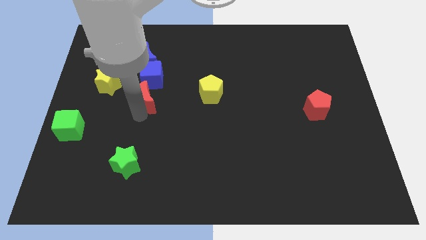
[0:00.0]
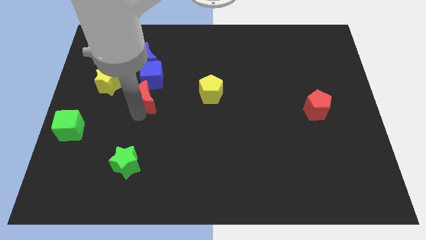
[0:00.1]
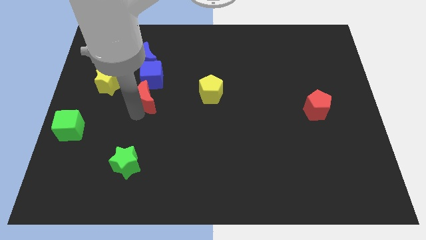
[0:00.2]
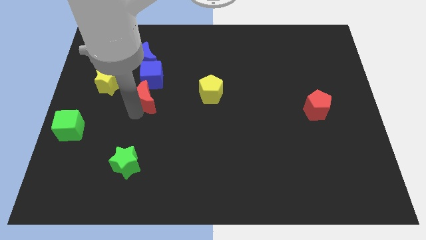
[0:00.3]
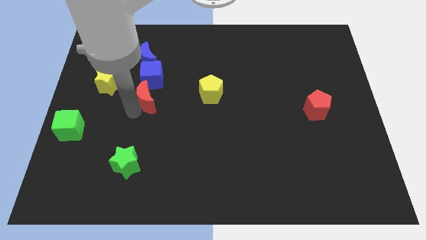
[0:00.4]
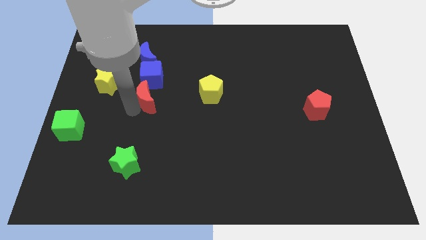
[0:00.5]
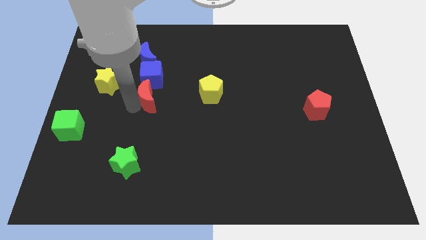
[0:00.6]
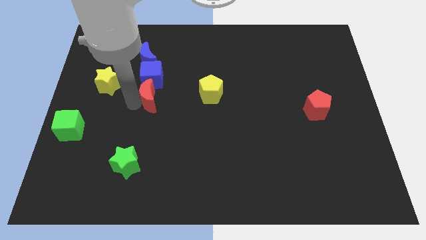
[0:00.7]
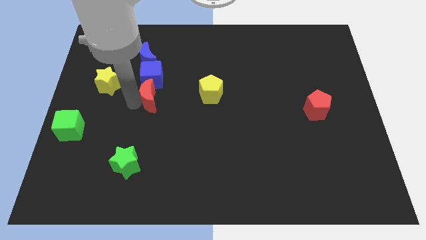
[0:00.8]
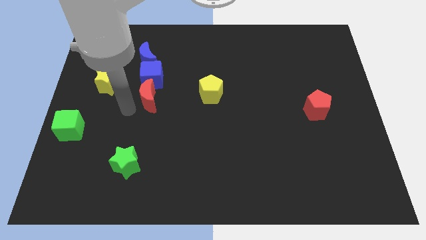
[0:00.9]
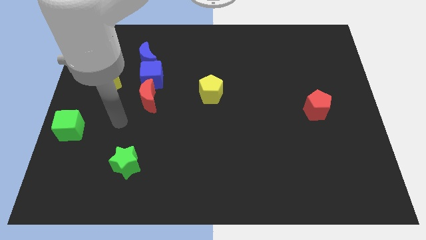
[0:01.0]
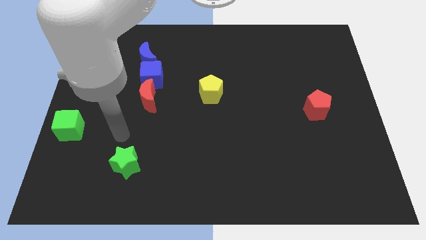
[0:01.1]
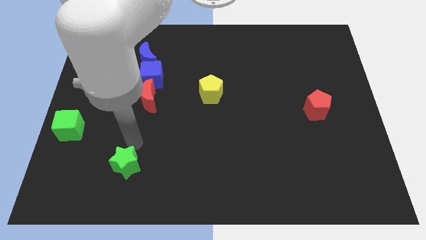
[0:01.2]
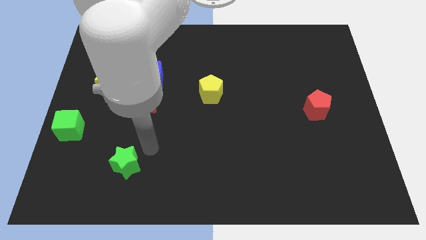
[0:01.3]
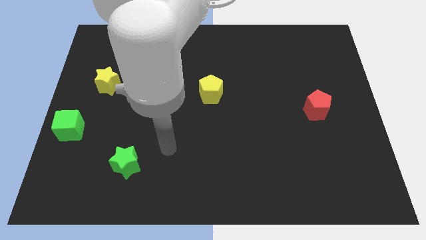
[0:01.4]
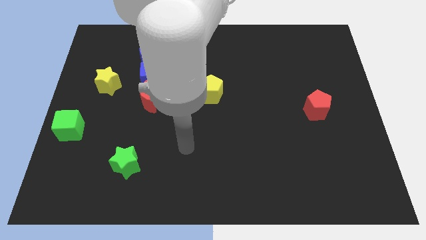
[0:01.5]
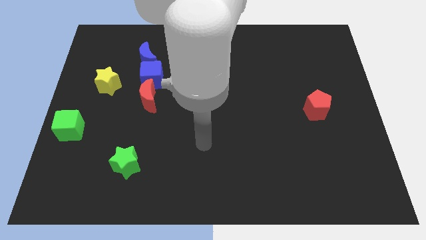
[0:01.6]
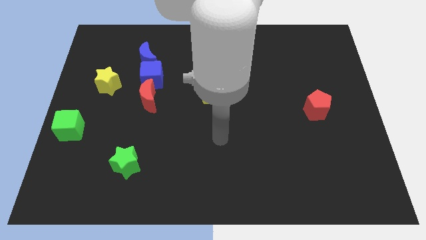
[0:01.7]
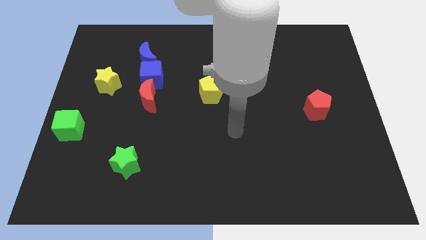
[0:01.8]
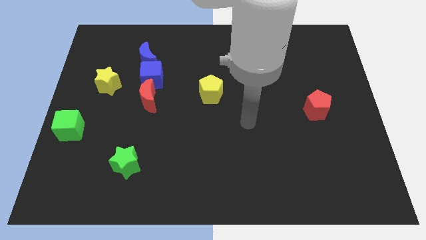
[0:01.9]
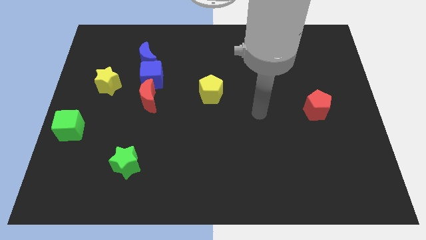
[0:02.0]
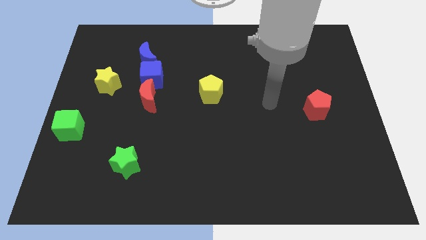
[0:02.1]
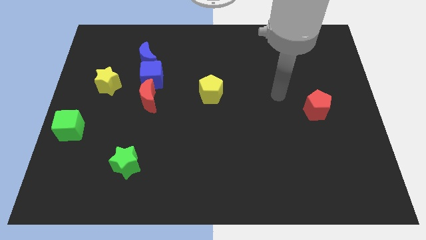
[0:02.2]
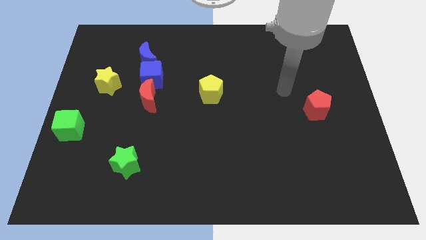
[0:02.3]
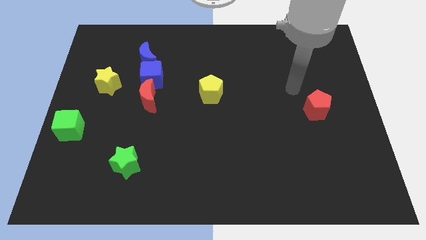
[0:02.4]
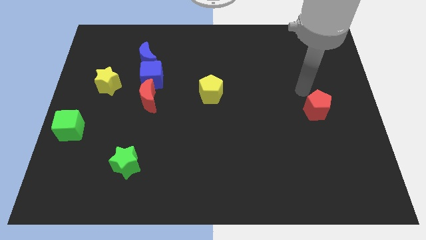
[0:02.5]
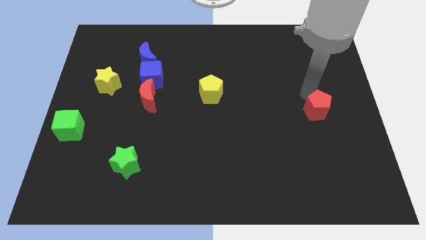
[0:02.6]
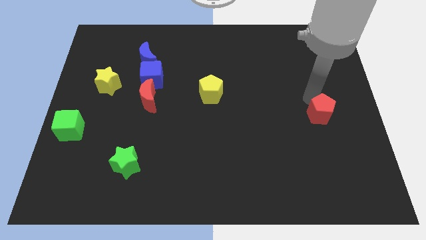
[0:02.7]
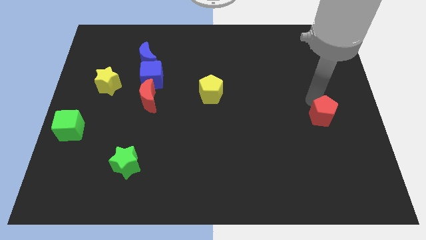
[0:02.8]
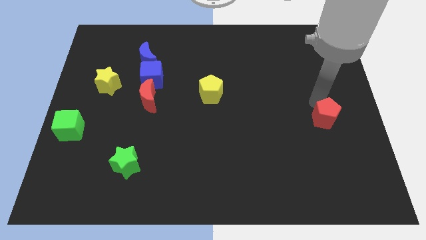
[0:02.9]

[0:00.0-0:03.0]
place the arm above the red pentagon

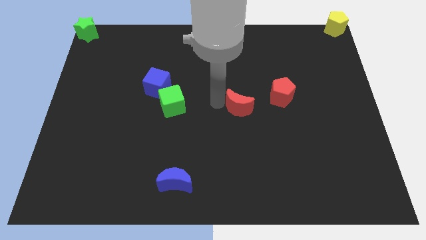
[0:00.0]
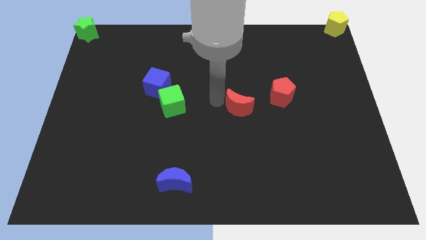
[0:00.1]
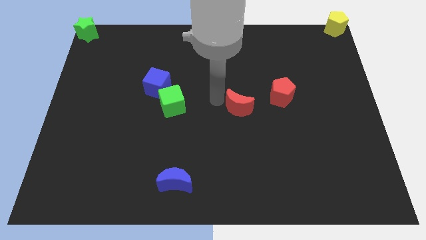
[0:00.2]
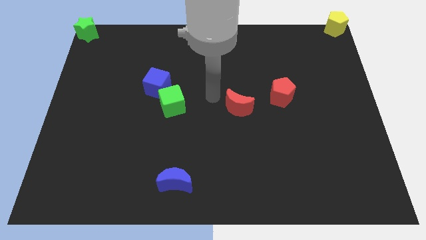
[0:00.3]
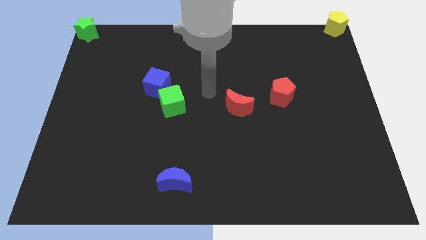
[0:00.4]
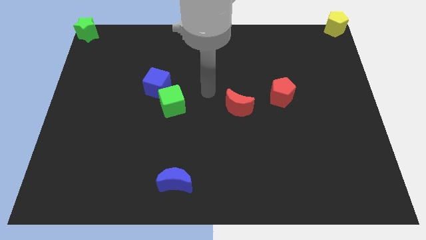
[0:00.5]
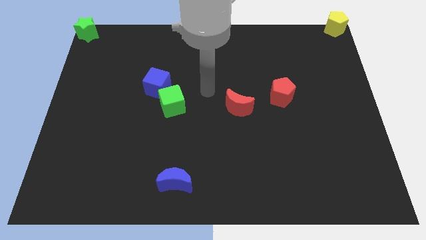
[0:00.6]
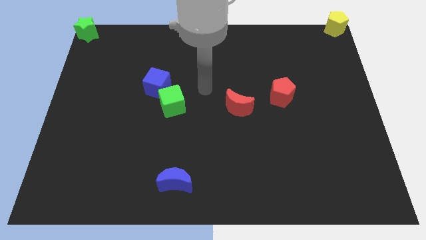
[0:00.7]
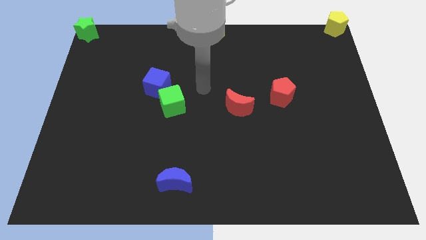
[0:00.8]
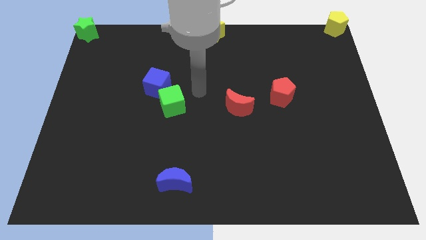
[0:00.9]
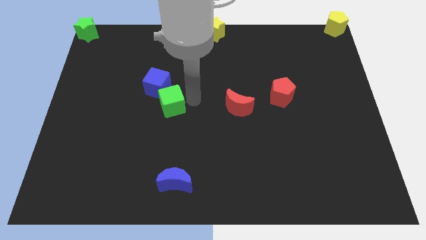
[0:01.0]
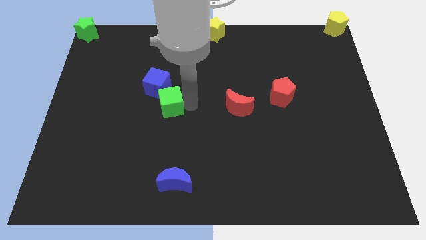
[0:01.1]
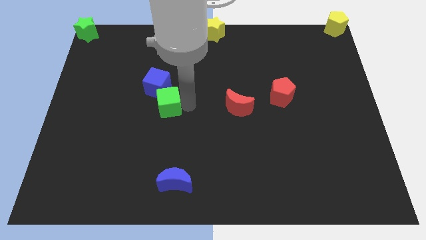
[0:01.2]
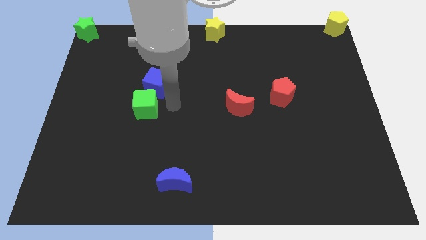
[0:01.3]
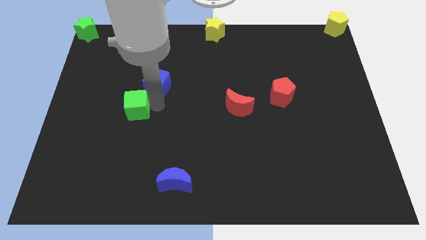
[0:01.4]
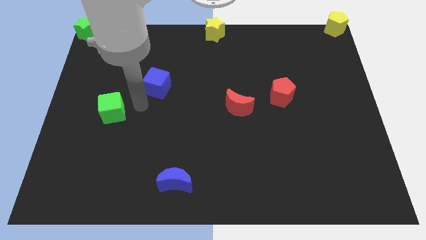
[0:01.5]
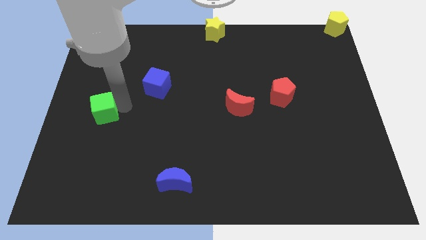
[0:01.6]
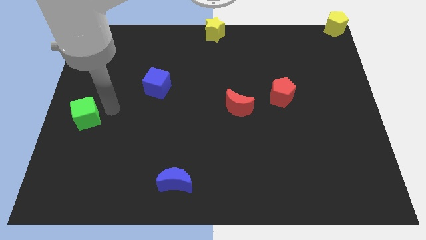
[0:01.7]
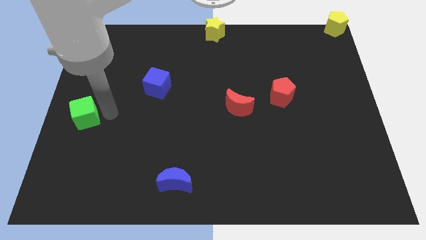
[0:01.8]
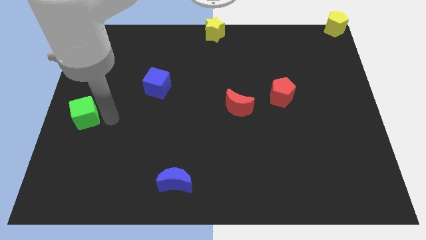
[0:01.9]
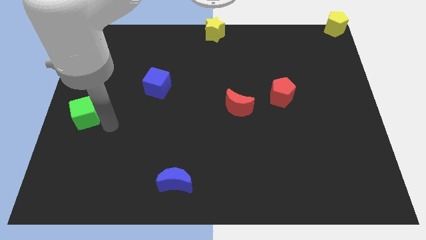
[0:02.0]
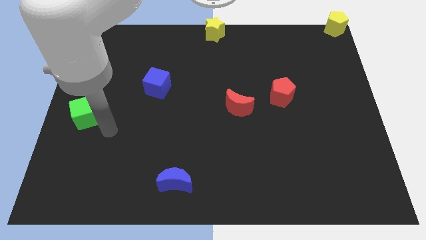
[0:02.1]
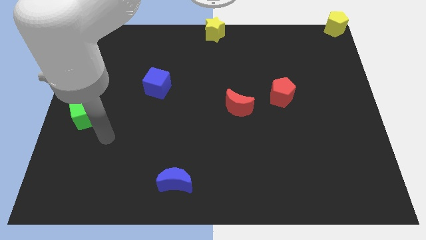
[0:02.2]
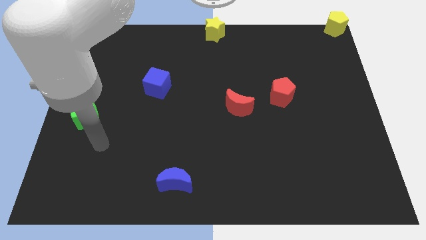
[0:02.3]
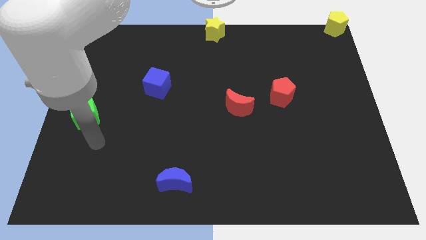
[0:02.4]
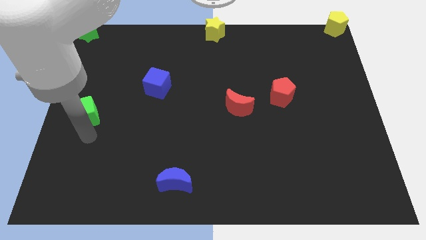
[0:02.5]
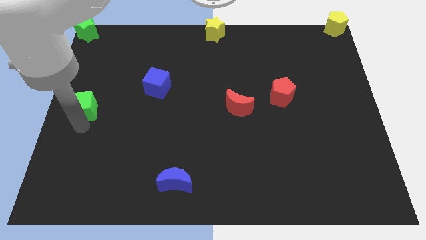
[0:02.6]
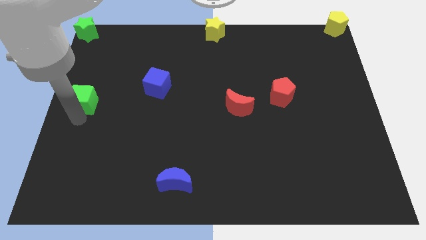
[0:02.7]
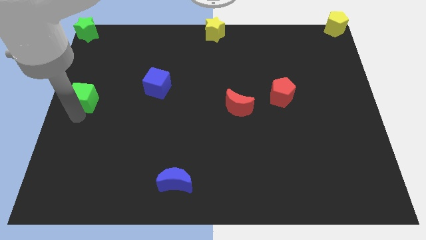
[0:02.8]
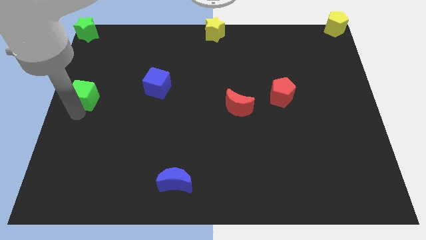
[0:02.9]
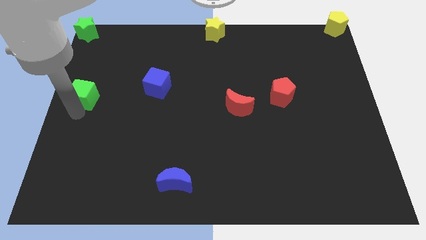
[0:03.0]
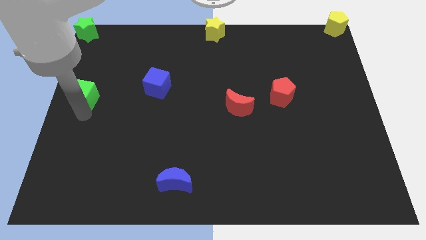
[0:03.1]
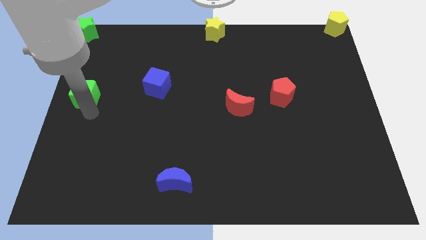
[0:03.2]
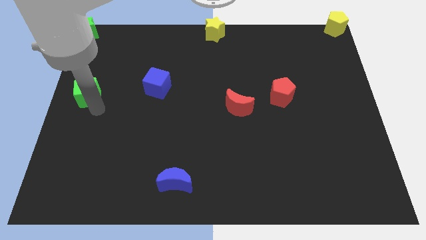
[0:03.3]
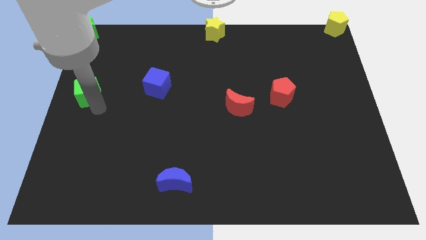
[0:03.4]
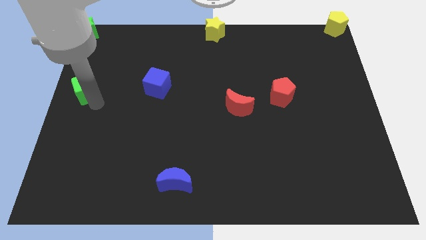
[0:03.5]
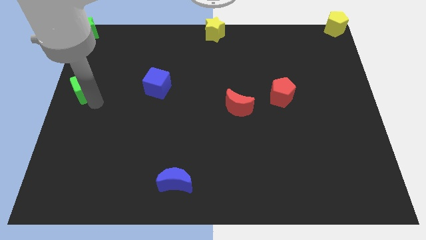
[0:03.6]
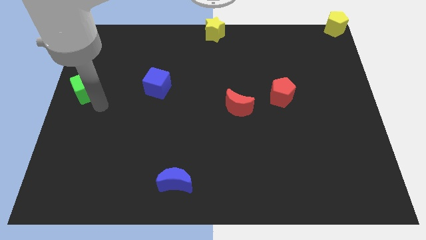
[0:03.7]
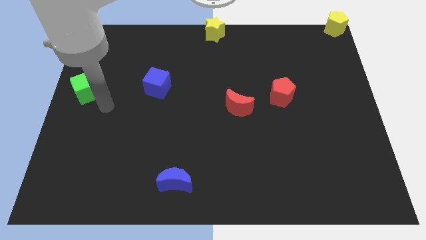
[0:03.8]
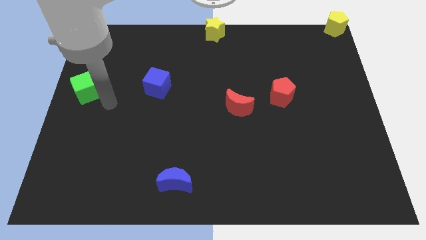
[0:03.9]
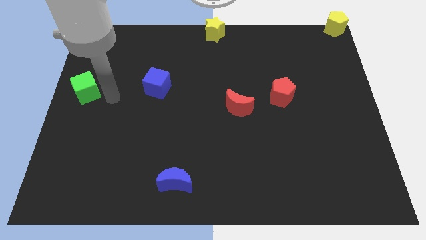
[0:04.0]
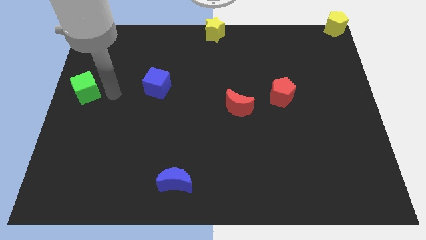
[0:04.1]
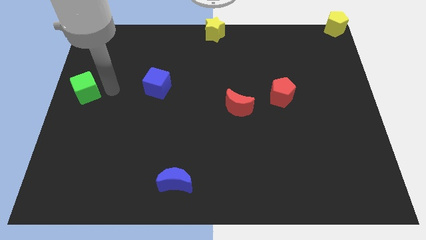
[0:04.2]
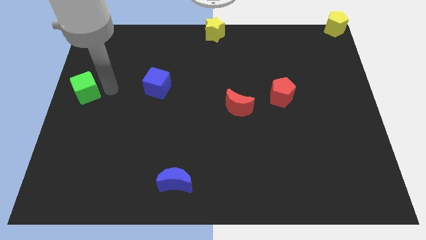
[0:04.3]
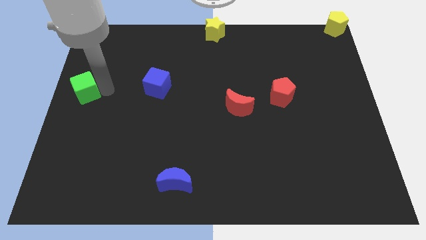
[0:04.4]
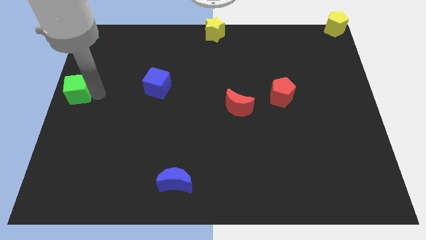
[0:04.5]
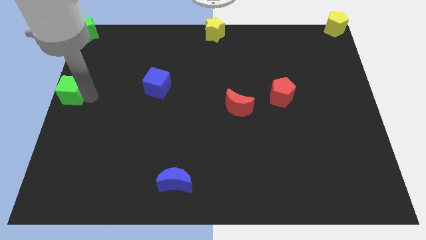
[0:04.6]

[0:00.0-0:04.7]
push green cube to left center of the board

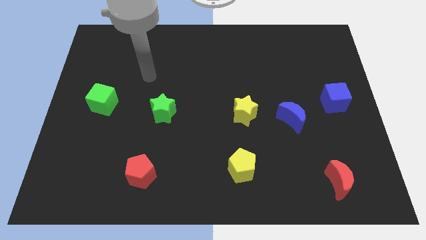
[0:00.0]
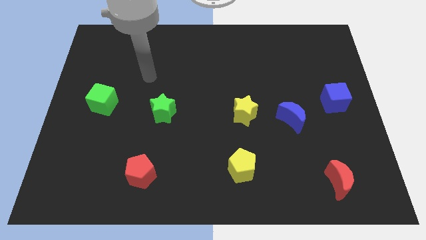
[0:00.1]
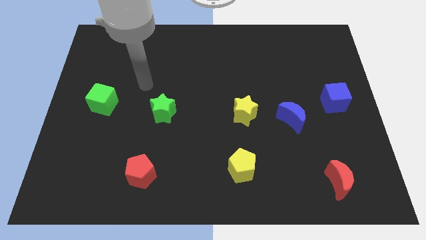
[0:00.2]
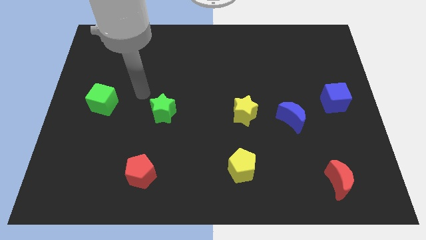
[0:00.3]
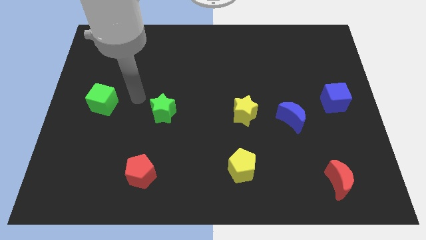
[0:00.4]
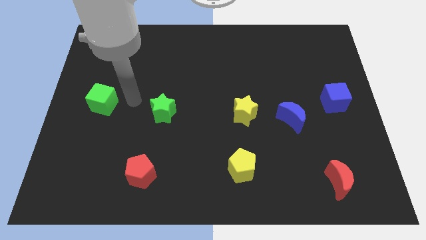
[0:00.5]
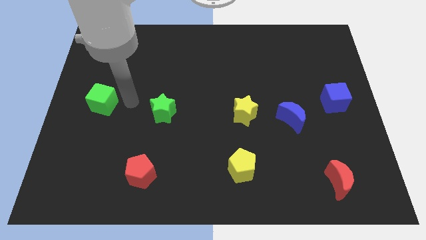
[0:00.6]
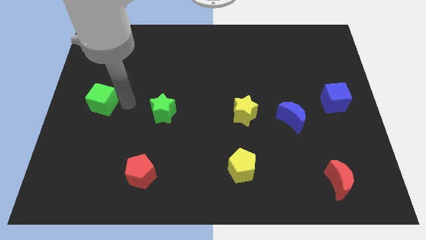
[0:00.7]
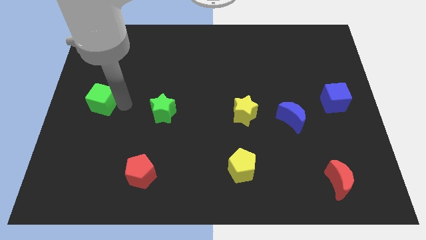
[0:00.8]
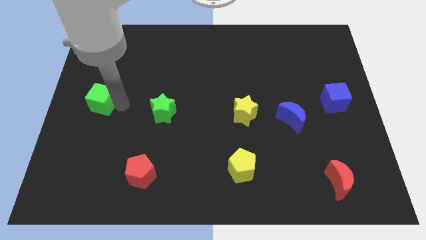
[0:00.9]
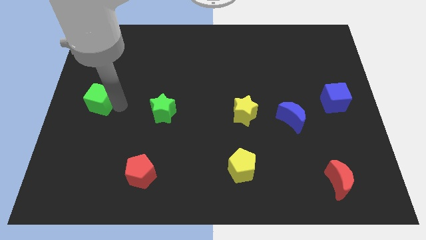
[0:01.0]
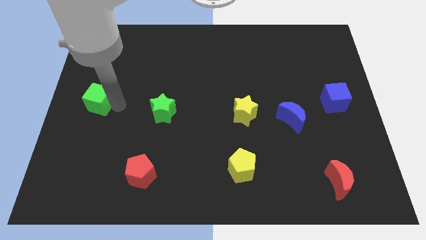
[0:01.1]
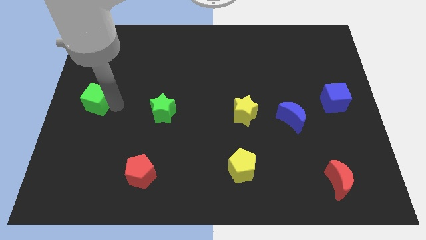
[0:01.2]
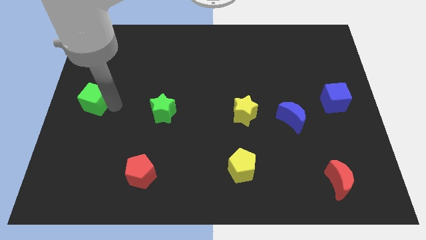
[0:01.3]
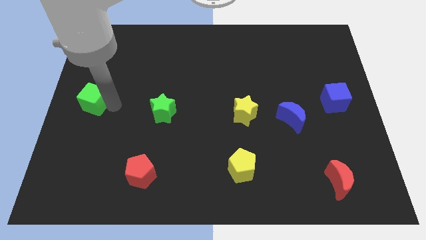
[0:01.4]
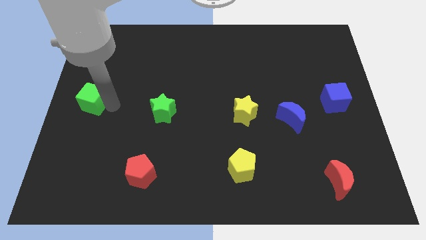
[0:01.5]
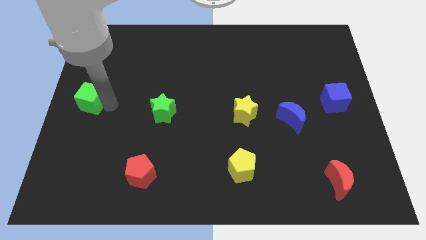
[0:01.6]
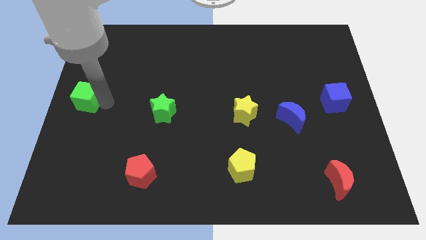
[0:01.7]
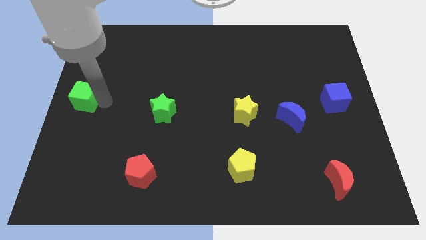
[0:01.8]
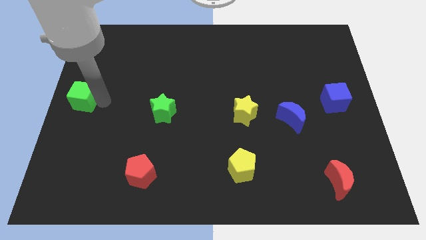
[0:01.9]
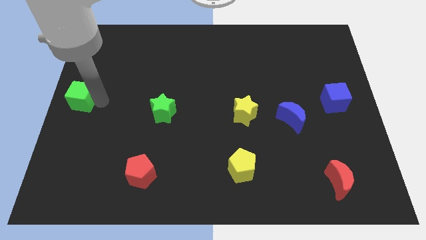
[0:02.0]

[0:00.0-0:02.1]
move the green cube to the center left
